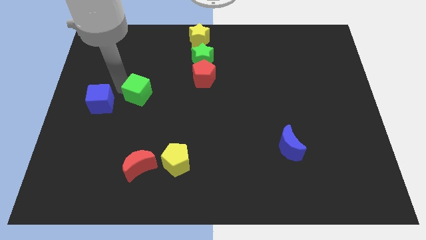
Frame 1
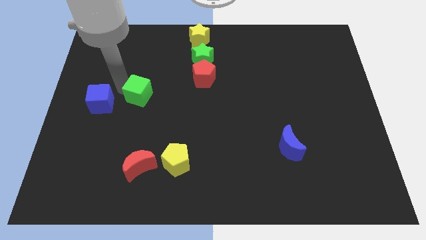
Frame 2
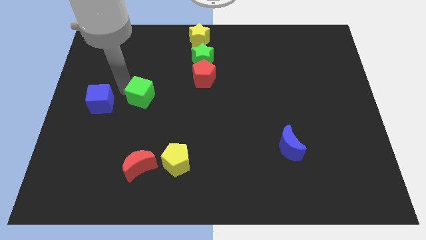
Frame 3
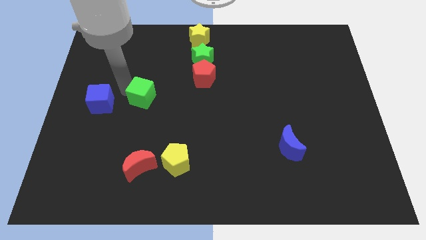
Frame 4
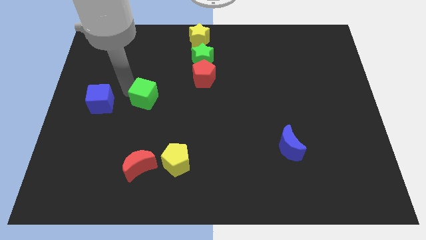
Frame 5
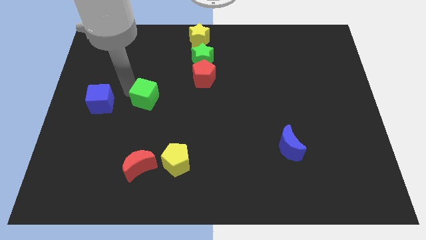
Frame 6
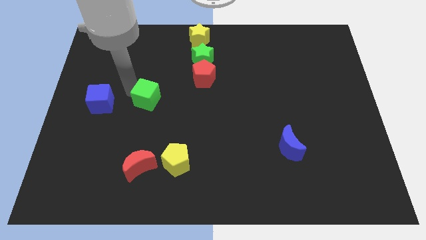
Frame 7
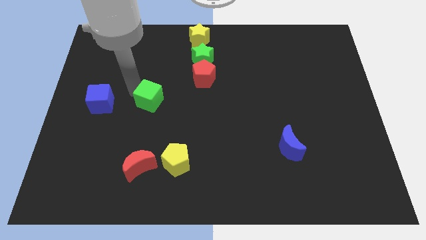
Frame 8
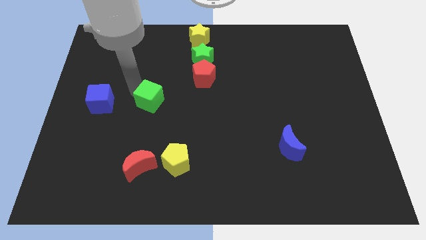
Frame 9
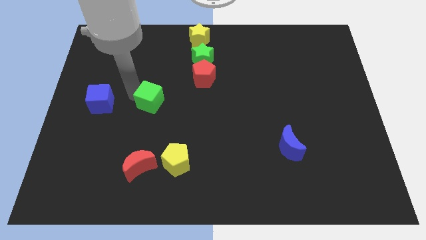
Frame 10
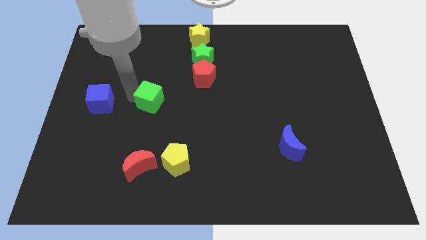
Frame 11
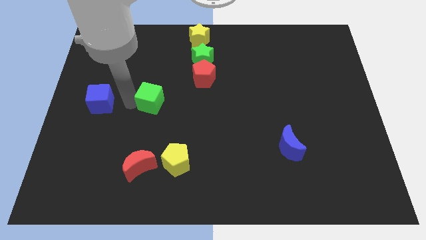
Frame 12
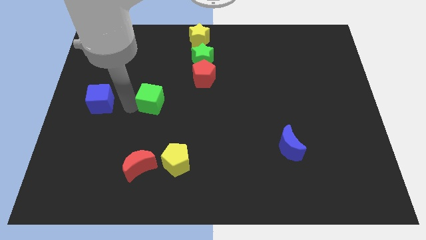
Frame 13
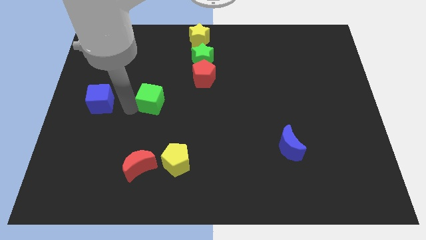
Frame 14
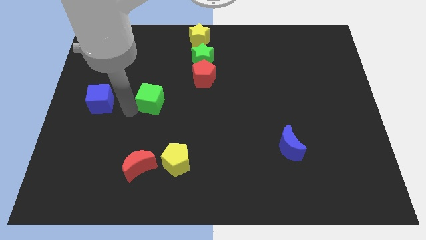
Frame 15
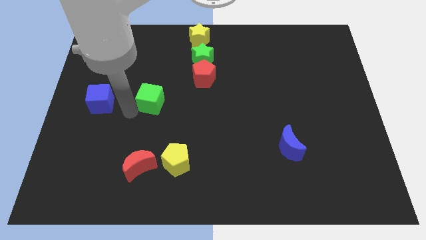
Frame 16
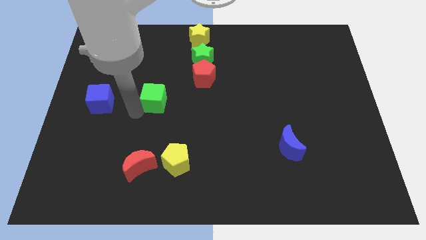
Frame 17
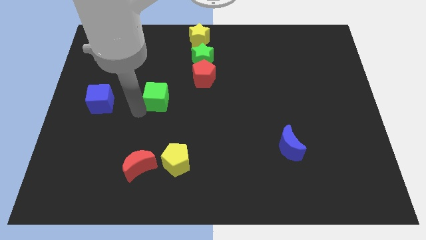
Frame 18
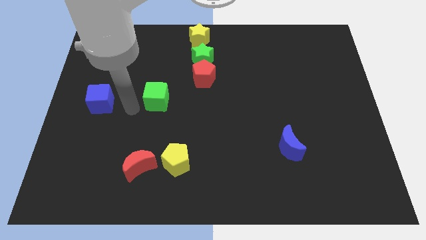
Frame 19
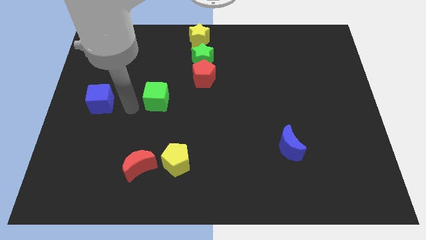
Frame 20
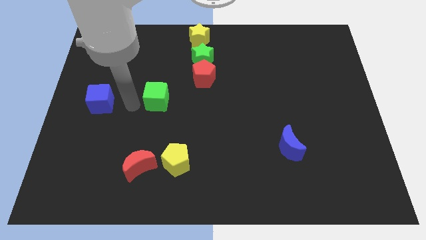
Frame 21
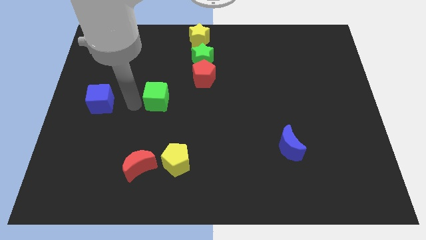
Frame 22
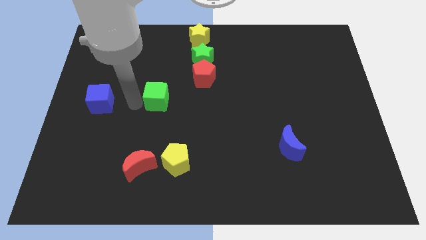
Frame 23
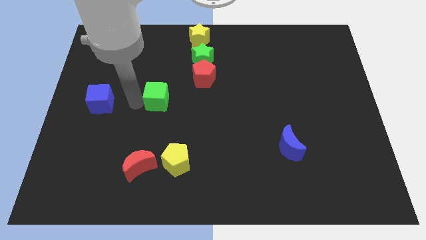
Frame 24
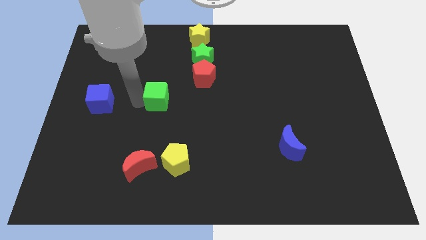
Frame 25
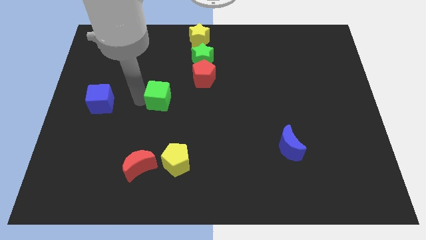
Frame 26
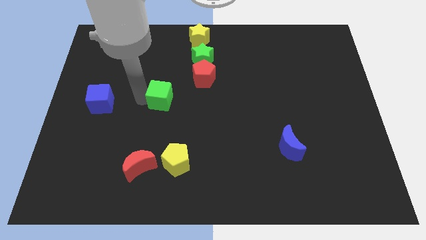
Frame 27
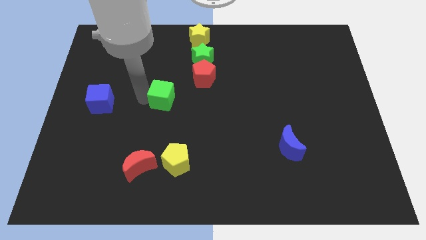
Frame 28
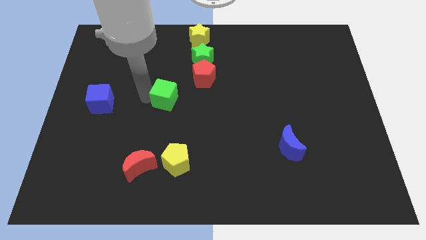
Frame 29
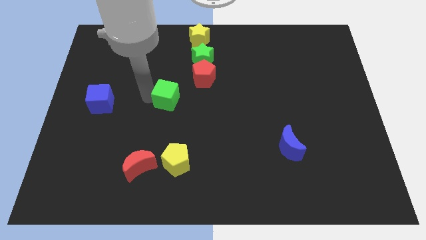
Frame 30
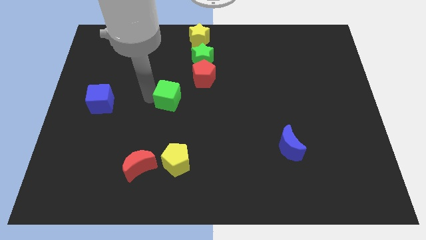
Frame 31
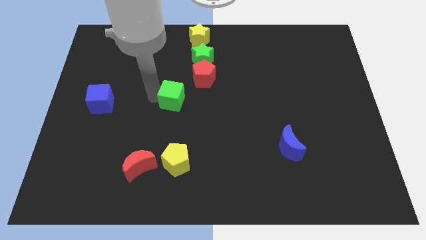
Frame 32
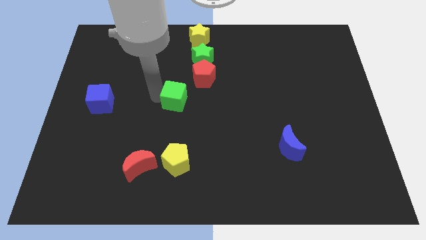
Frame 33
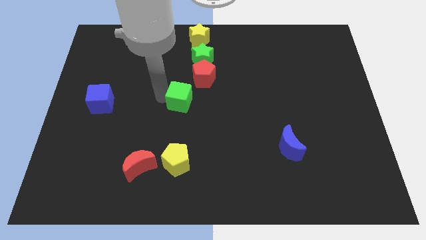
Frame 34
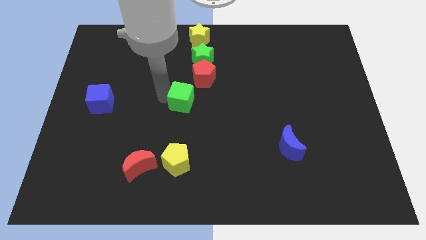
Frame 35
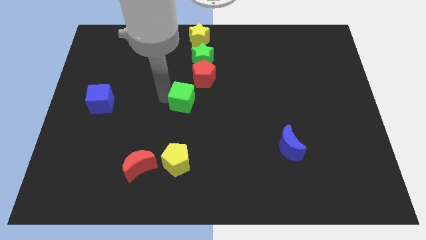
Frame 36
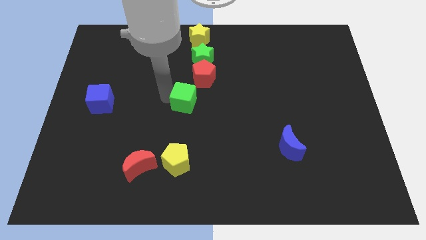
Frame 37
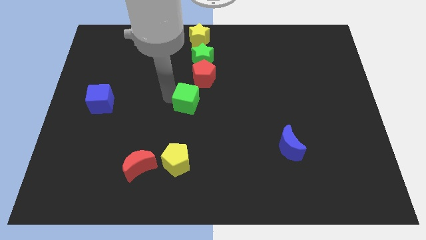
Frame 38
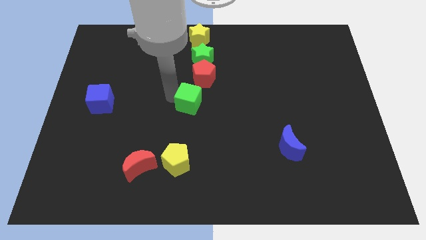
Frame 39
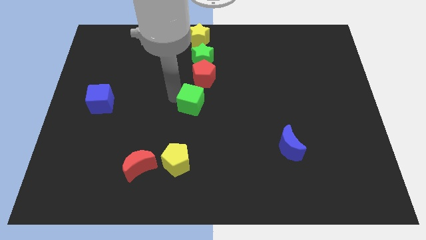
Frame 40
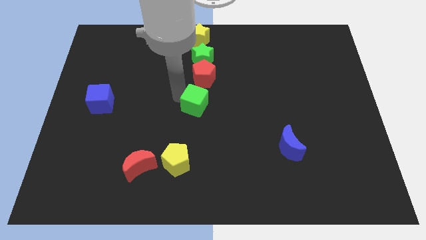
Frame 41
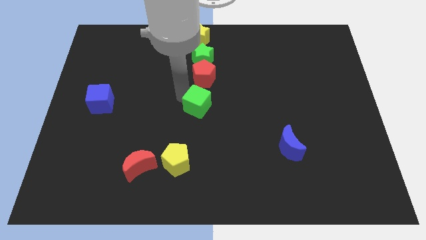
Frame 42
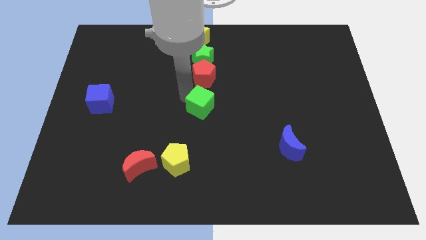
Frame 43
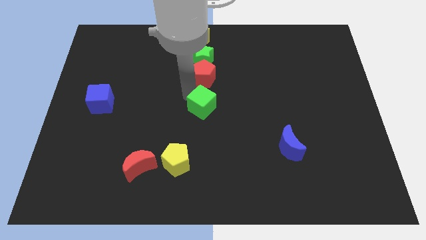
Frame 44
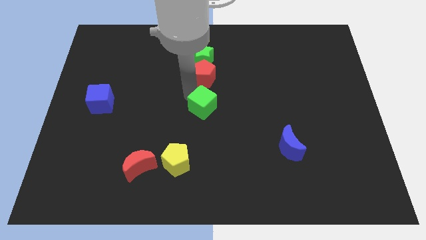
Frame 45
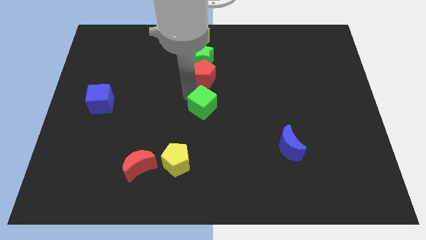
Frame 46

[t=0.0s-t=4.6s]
drag the green cube and place it below the red pentagon

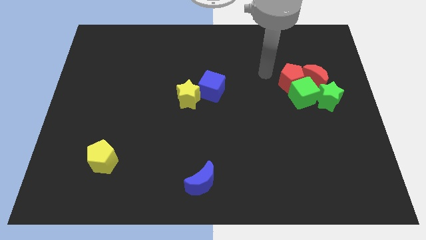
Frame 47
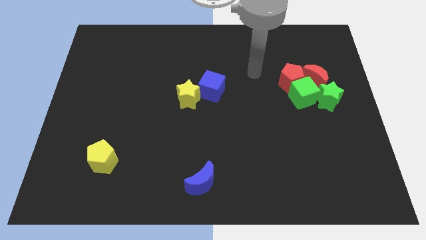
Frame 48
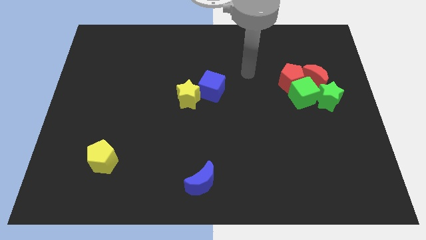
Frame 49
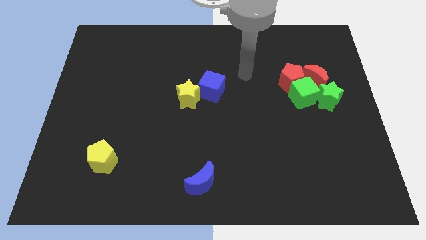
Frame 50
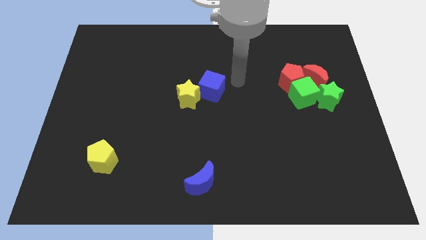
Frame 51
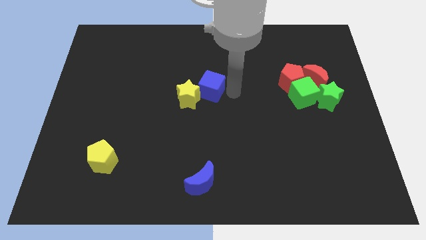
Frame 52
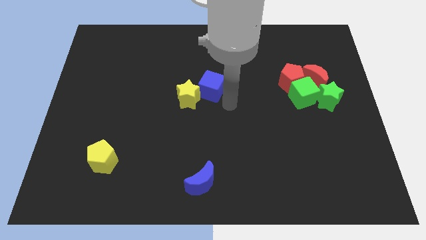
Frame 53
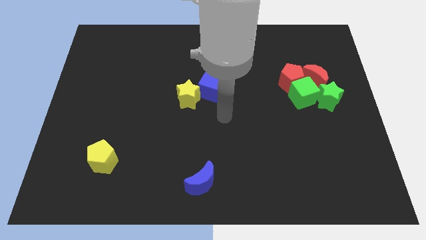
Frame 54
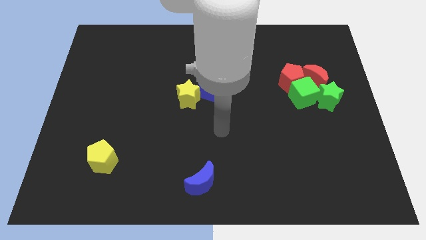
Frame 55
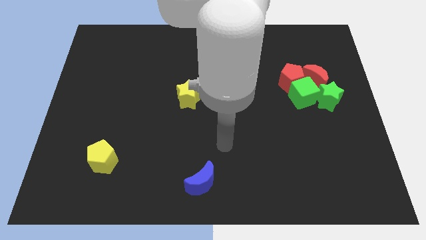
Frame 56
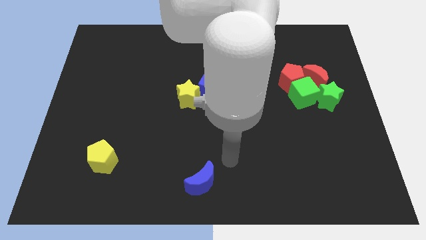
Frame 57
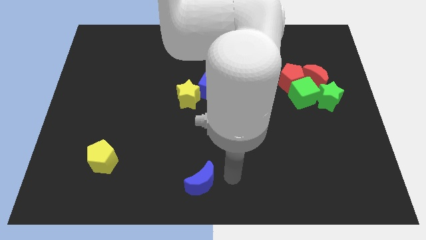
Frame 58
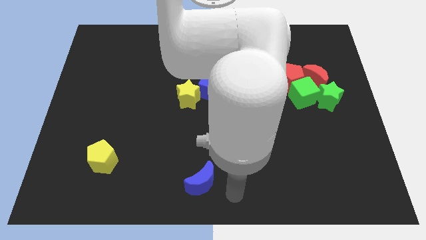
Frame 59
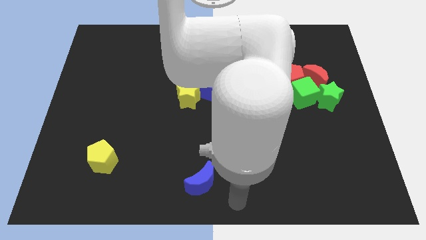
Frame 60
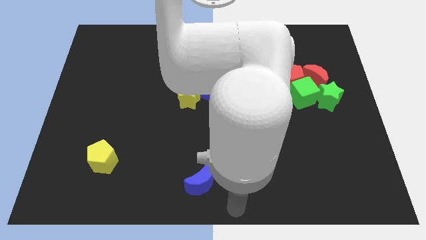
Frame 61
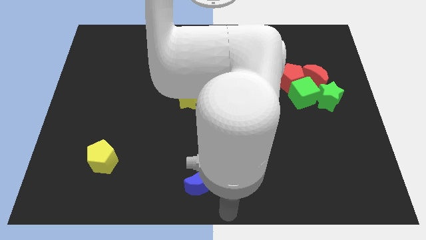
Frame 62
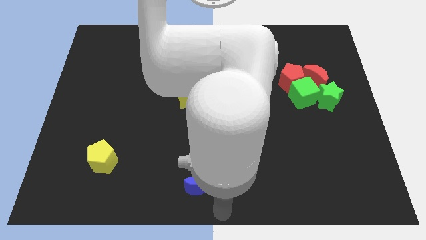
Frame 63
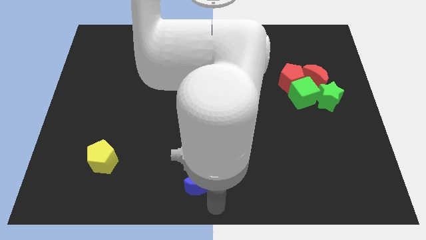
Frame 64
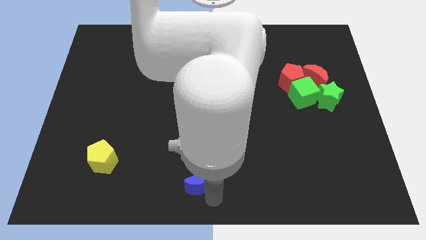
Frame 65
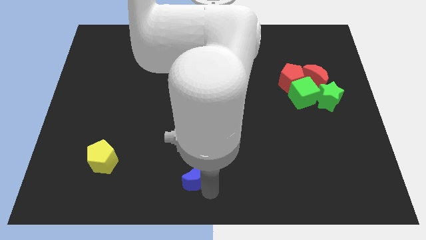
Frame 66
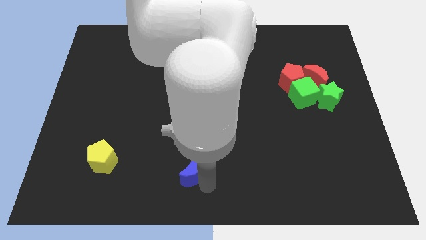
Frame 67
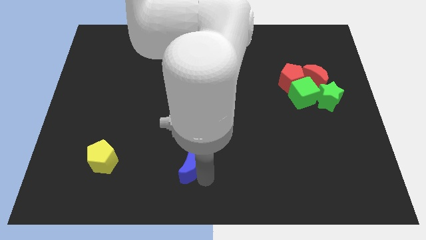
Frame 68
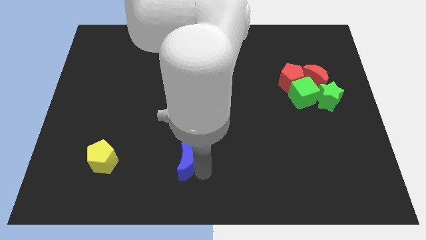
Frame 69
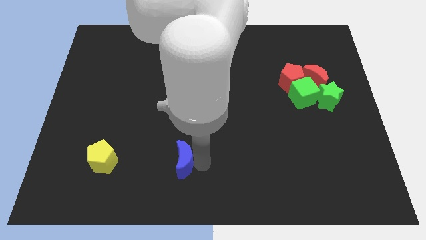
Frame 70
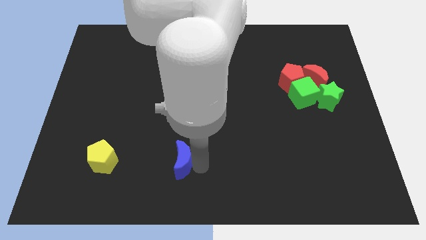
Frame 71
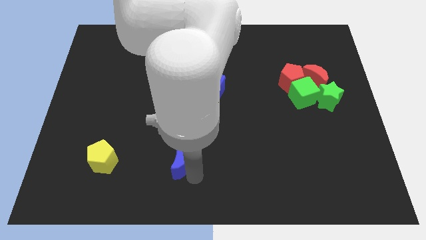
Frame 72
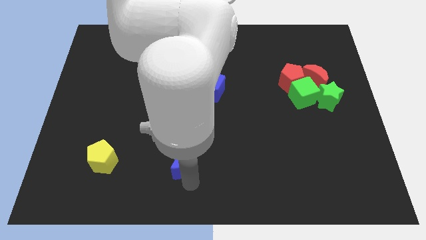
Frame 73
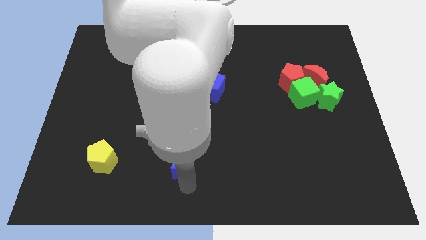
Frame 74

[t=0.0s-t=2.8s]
place the blue moon horizontally to the right of the yellow pentagon

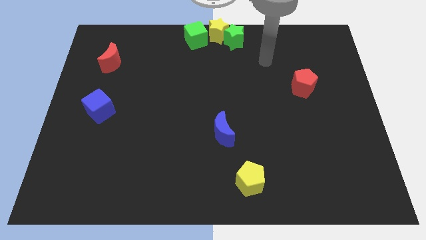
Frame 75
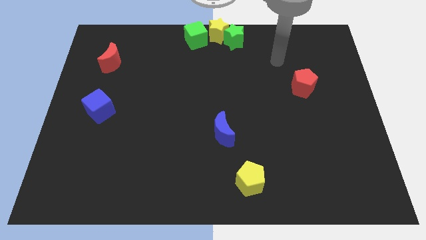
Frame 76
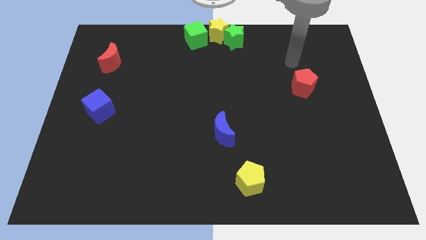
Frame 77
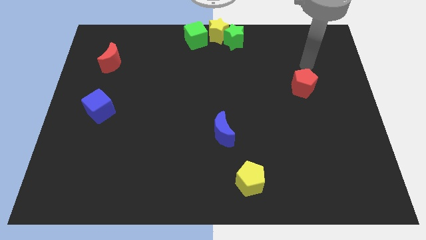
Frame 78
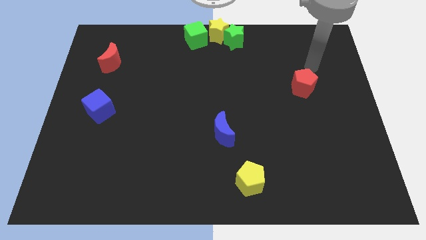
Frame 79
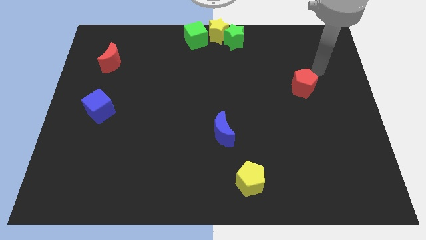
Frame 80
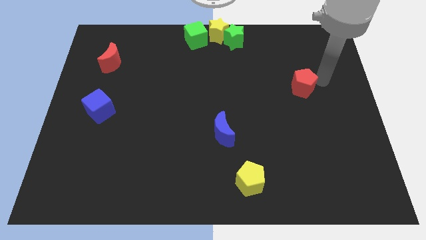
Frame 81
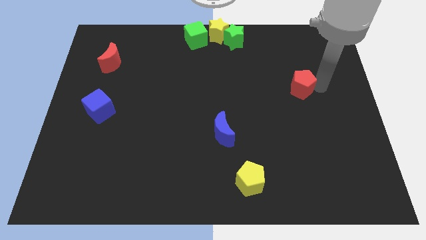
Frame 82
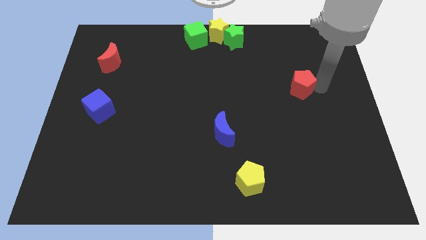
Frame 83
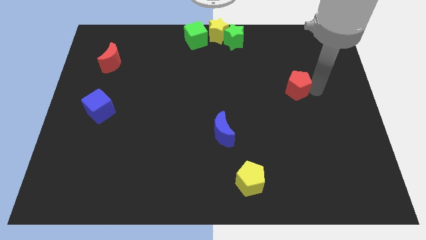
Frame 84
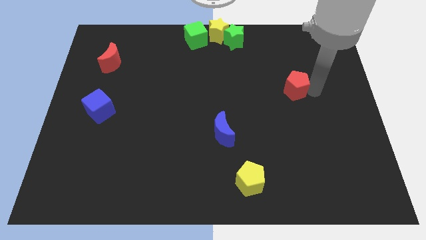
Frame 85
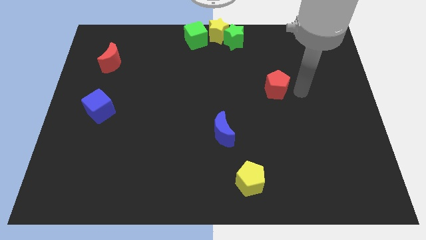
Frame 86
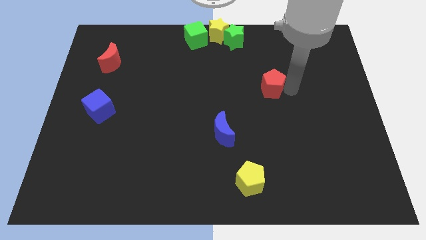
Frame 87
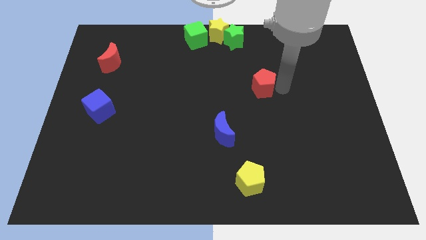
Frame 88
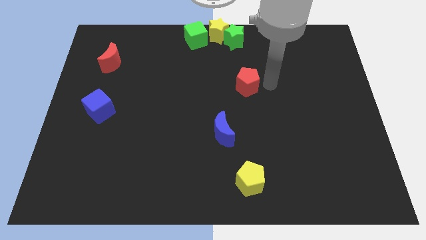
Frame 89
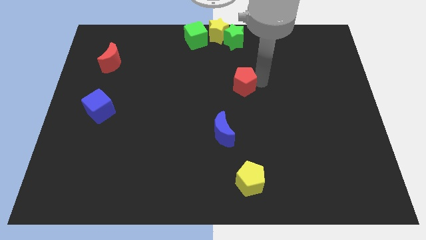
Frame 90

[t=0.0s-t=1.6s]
drag the red pentagon diagonally on the top right side of the blue crescent
